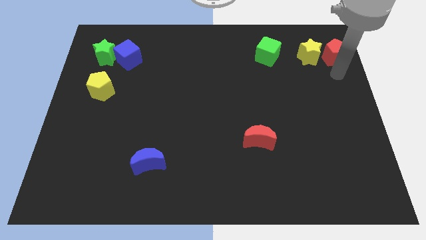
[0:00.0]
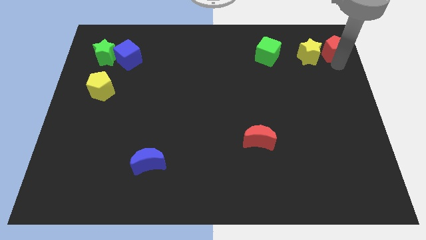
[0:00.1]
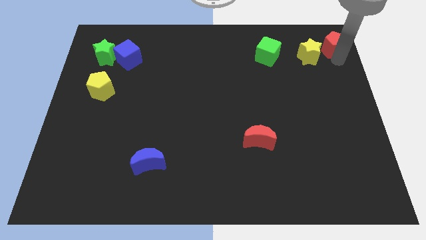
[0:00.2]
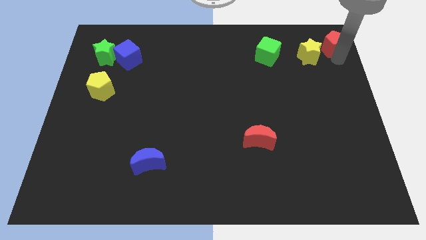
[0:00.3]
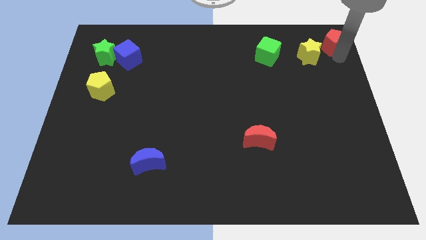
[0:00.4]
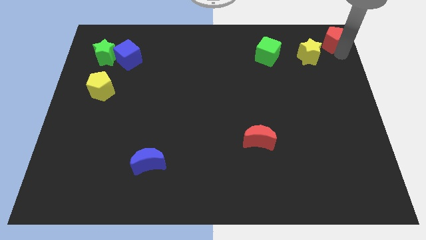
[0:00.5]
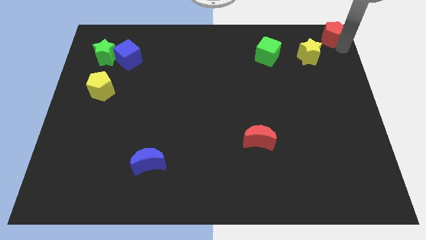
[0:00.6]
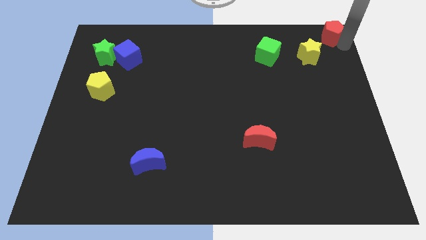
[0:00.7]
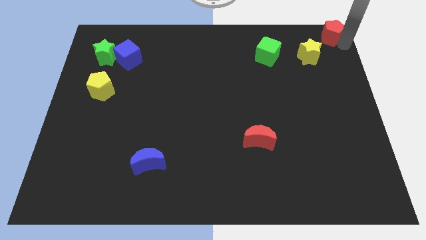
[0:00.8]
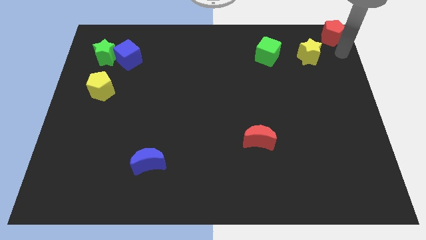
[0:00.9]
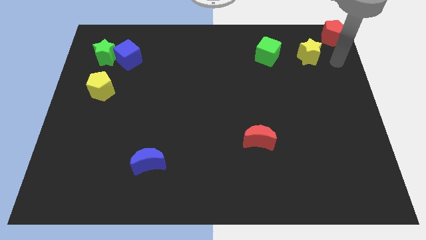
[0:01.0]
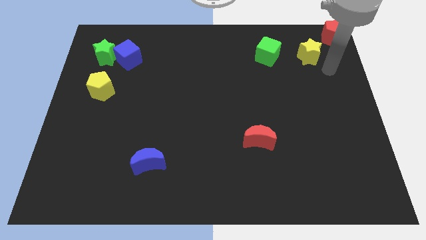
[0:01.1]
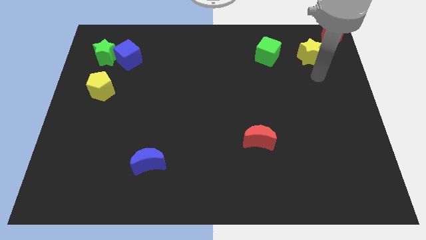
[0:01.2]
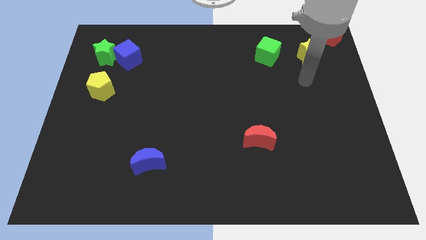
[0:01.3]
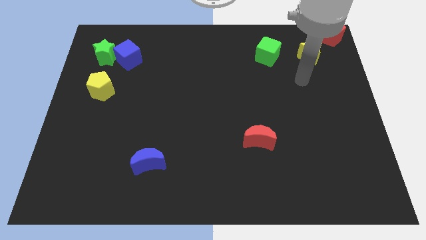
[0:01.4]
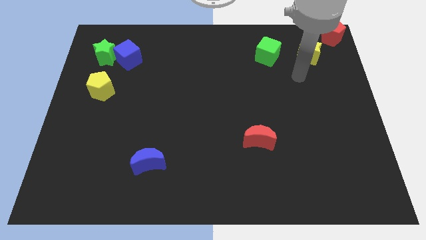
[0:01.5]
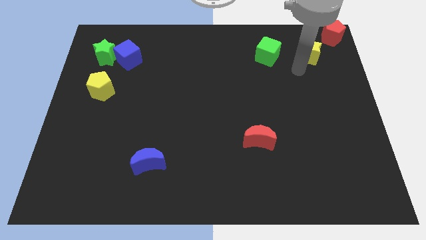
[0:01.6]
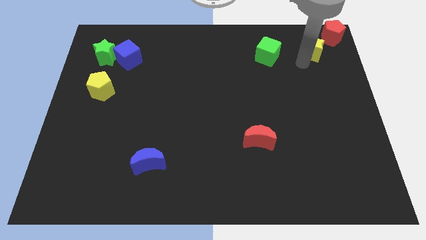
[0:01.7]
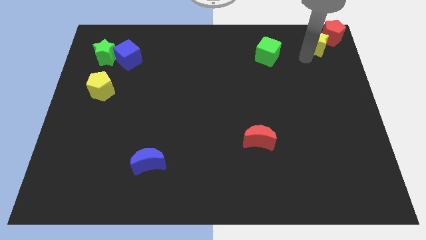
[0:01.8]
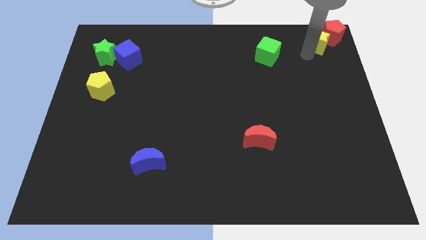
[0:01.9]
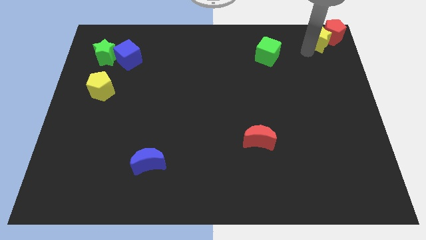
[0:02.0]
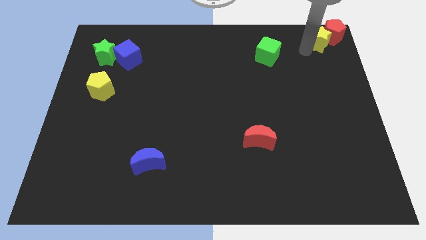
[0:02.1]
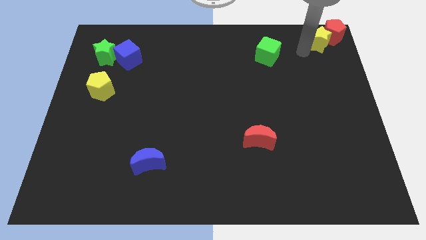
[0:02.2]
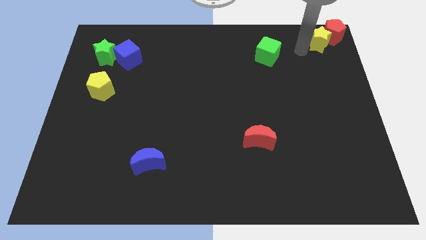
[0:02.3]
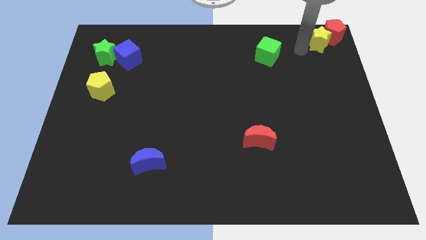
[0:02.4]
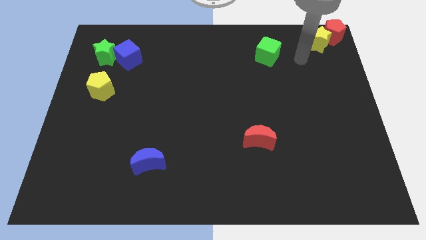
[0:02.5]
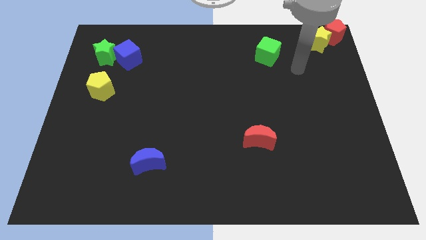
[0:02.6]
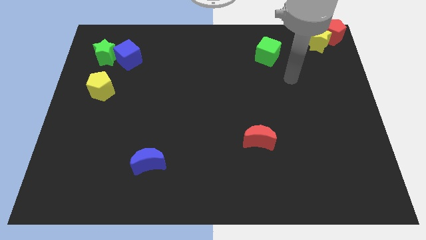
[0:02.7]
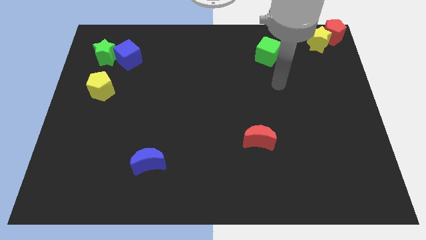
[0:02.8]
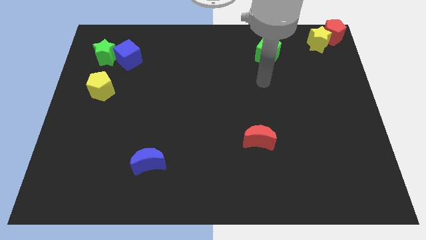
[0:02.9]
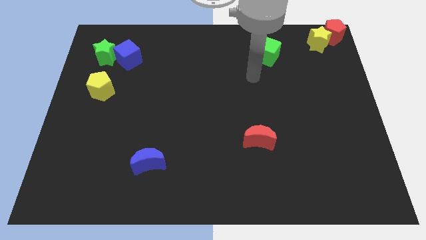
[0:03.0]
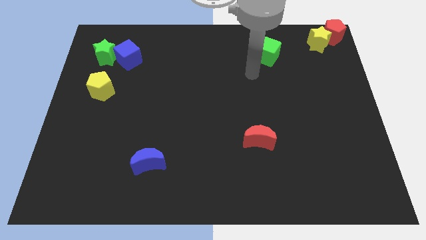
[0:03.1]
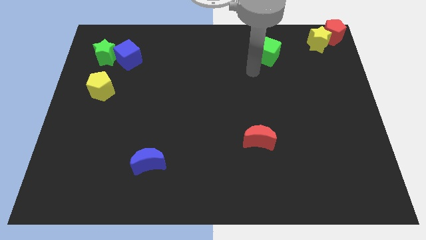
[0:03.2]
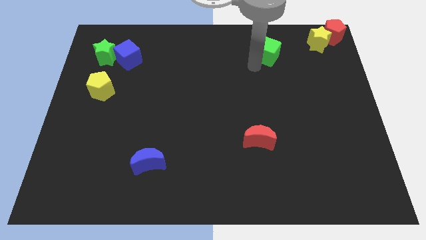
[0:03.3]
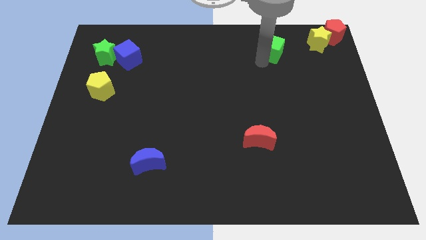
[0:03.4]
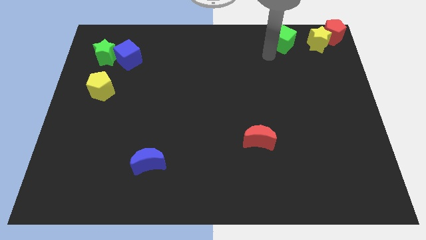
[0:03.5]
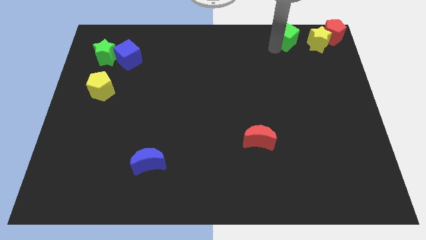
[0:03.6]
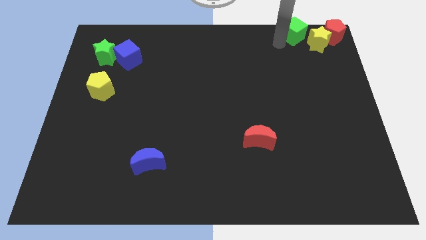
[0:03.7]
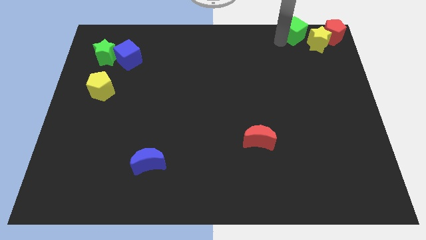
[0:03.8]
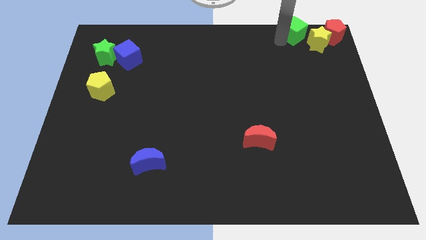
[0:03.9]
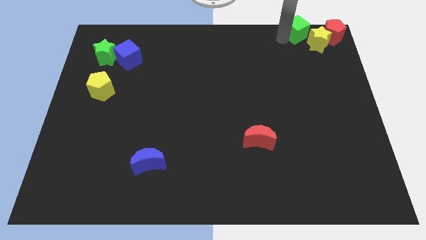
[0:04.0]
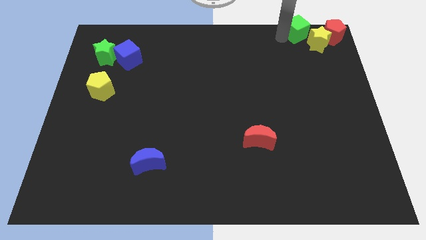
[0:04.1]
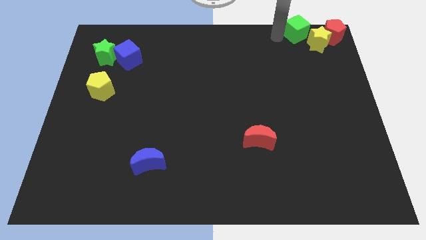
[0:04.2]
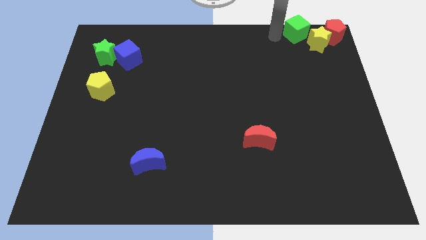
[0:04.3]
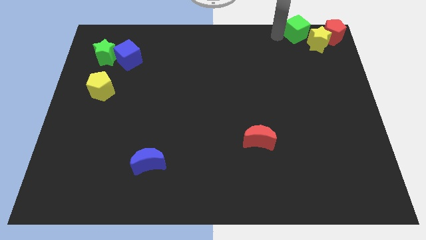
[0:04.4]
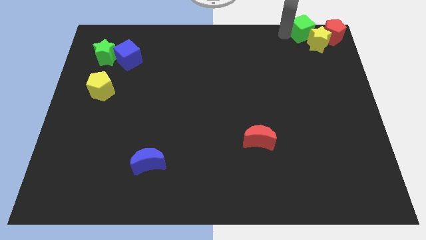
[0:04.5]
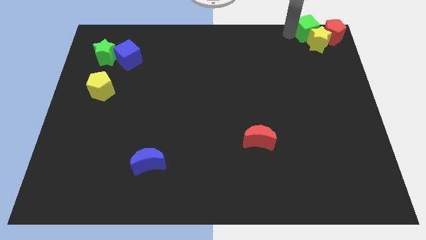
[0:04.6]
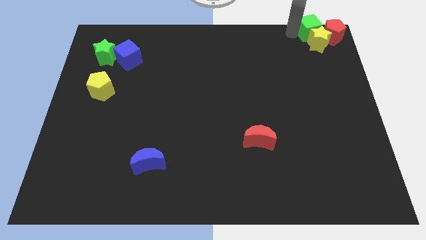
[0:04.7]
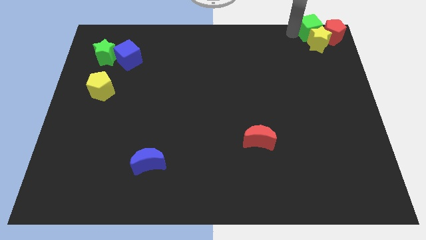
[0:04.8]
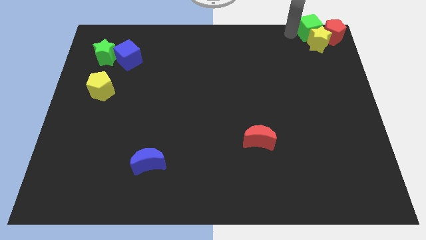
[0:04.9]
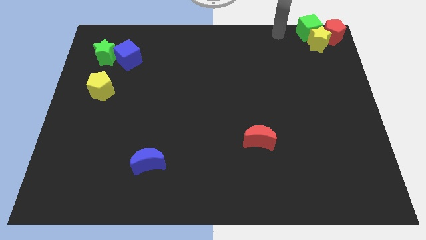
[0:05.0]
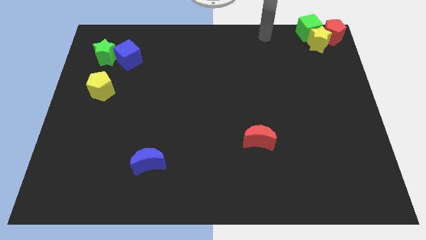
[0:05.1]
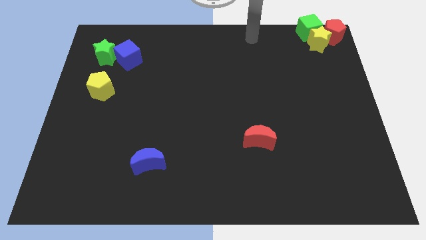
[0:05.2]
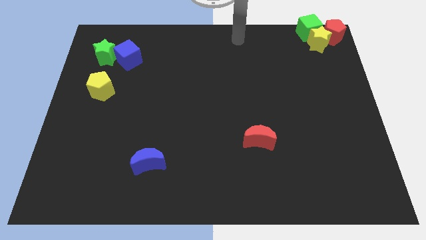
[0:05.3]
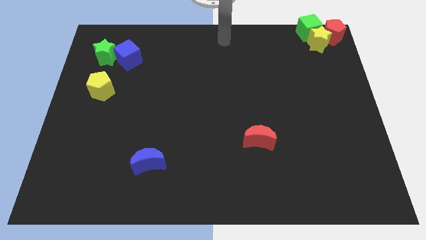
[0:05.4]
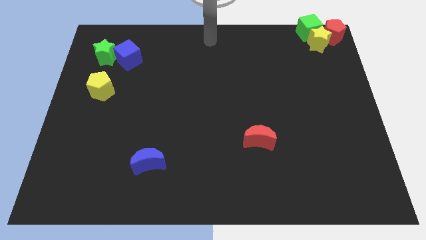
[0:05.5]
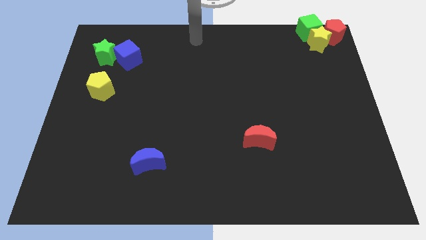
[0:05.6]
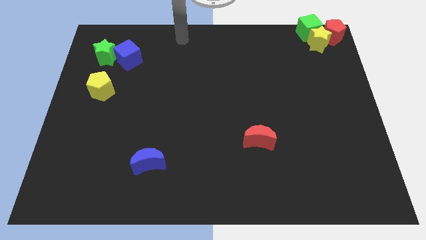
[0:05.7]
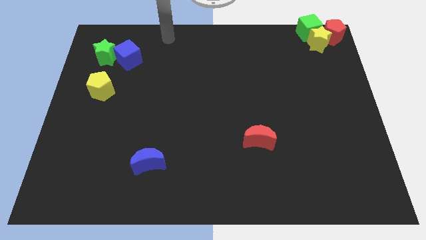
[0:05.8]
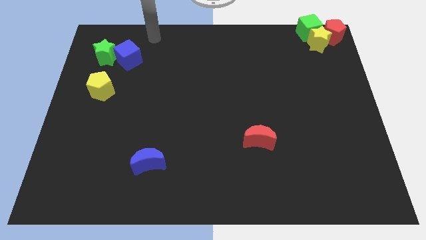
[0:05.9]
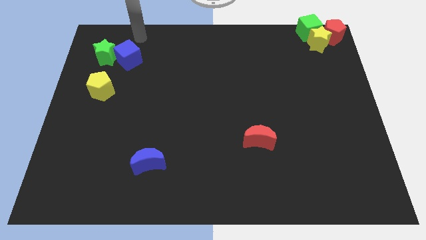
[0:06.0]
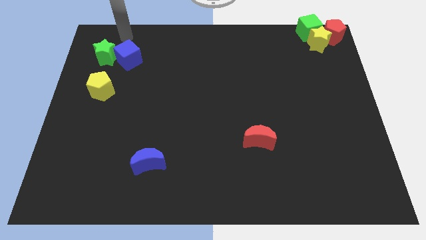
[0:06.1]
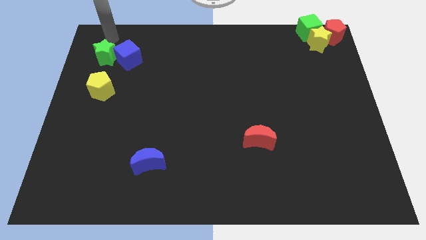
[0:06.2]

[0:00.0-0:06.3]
move red pentagon yellow star and green cube to the top right corner of the board

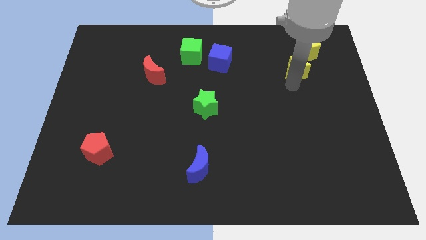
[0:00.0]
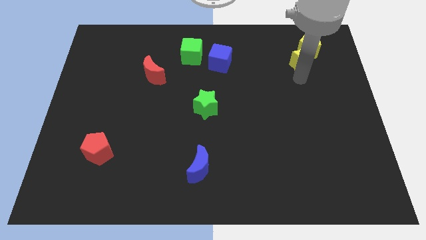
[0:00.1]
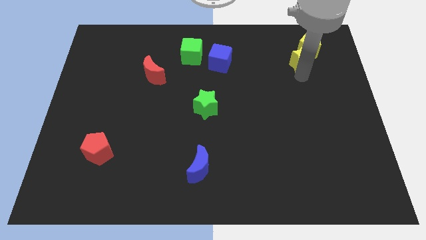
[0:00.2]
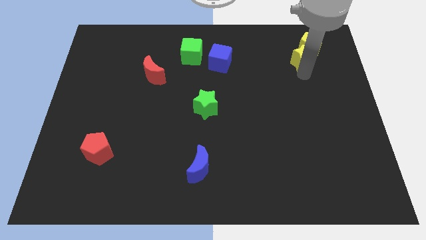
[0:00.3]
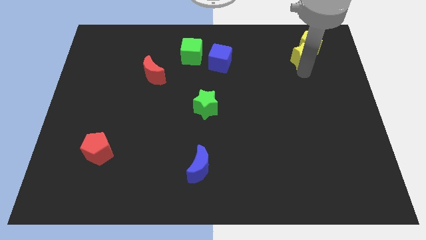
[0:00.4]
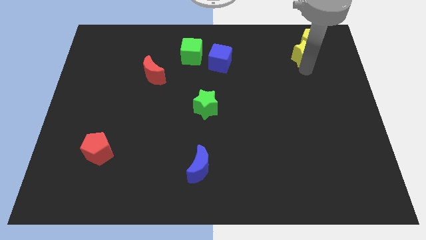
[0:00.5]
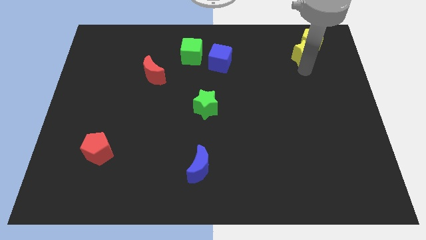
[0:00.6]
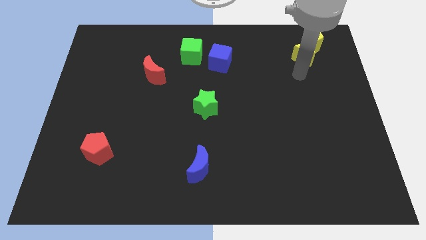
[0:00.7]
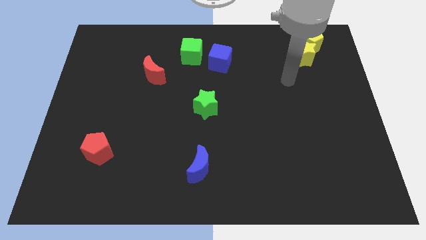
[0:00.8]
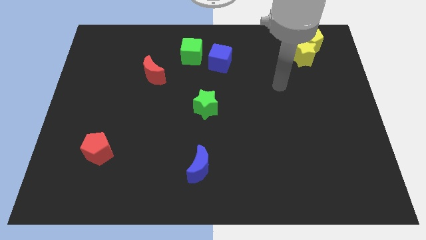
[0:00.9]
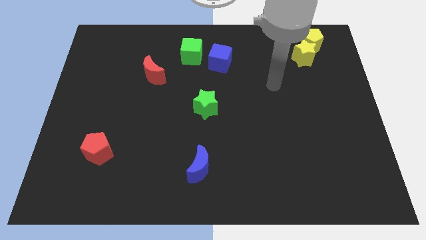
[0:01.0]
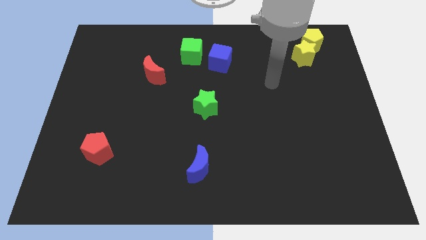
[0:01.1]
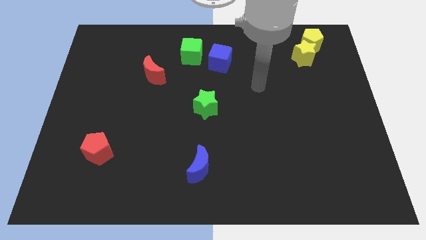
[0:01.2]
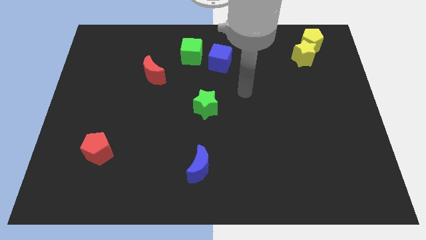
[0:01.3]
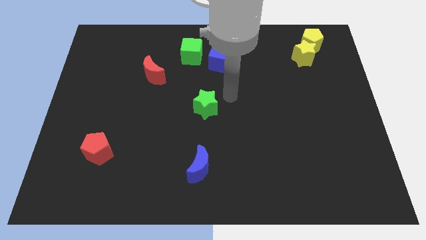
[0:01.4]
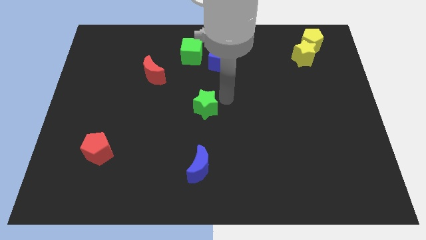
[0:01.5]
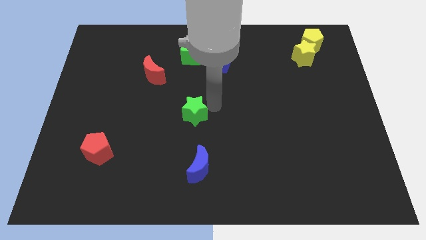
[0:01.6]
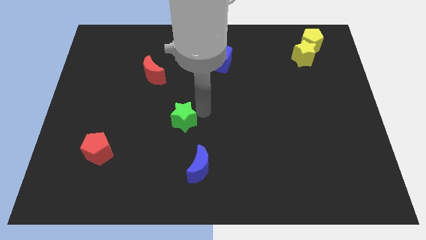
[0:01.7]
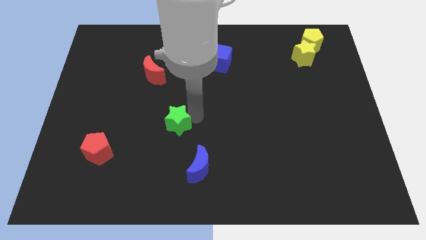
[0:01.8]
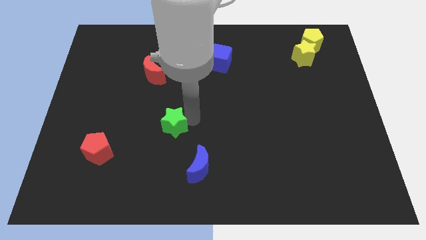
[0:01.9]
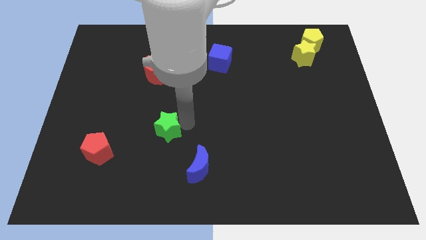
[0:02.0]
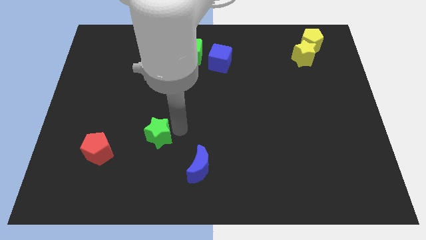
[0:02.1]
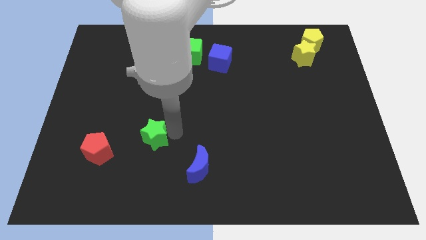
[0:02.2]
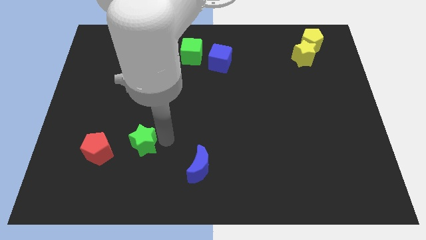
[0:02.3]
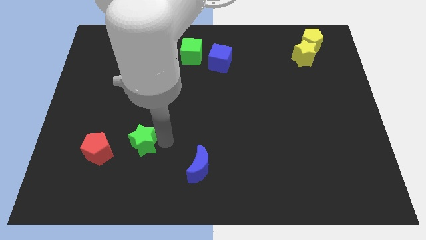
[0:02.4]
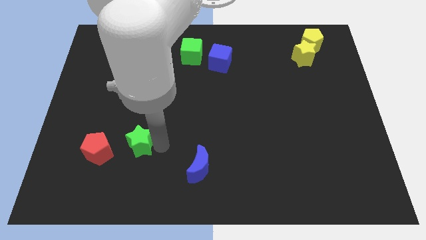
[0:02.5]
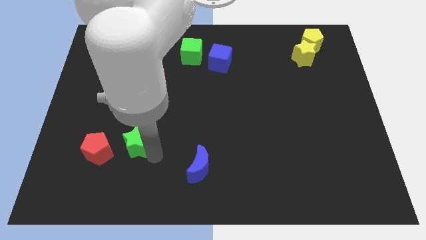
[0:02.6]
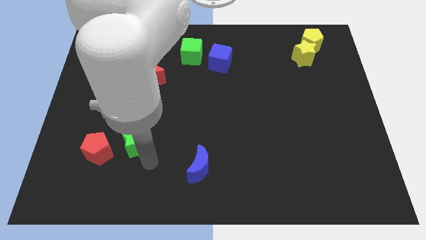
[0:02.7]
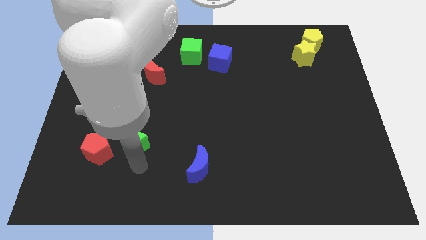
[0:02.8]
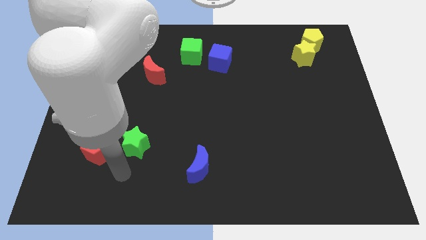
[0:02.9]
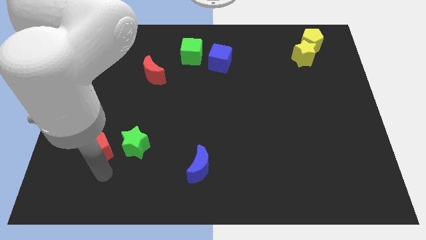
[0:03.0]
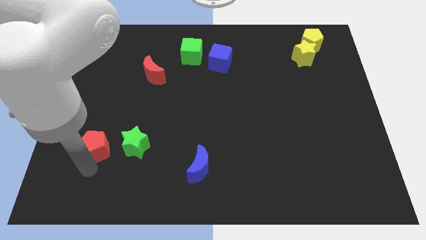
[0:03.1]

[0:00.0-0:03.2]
move the yellow star into the yellow pentagon
